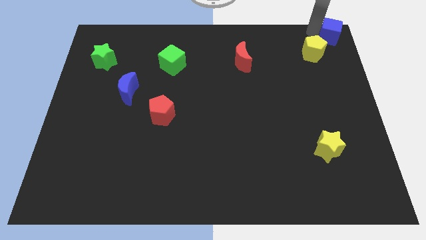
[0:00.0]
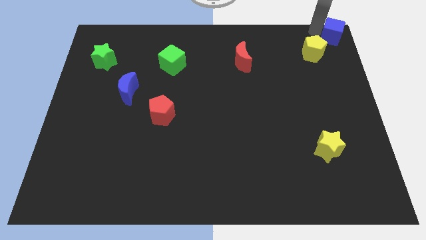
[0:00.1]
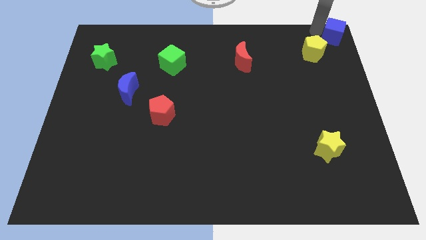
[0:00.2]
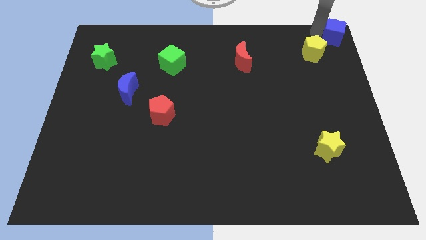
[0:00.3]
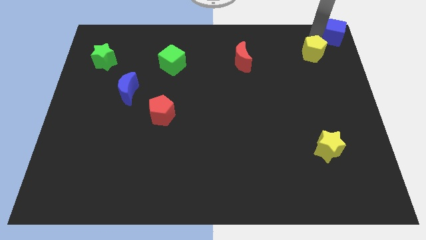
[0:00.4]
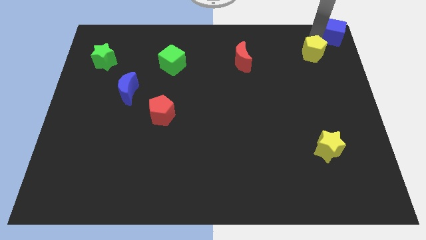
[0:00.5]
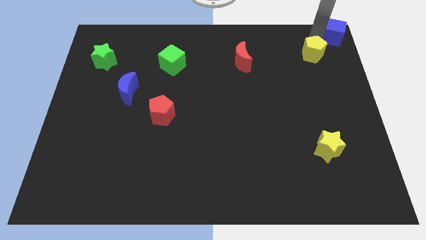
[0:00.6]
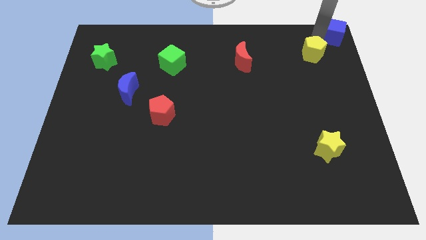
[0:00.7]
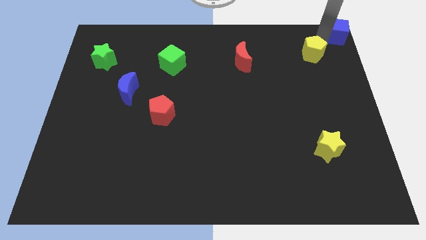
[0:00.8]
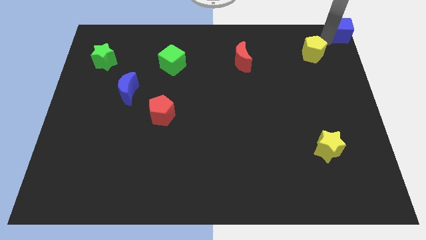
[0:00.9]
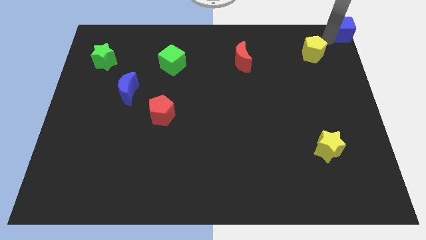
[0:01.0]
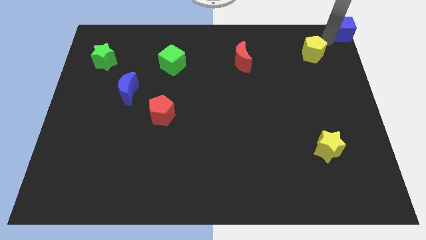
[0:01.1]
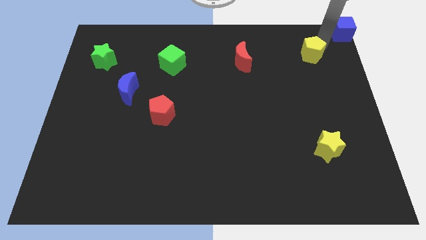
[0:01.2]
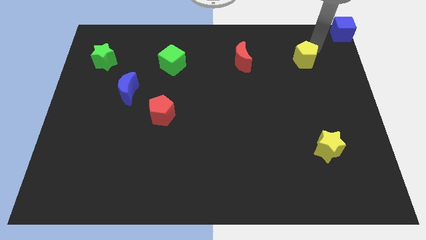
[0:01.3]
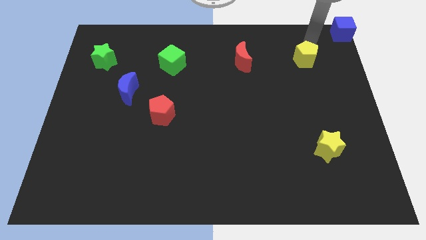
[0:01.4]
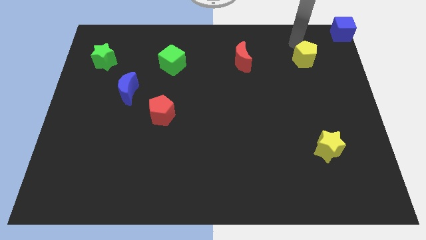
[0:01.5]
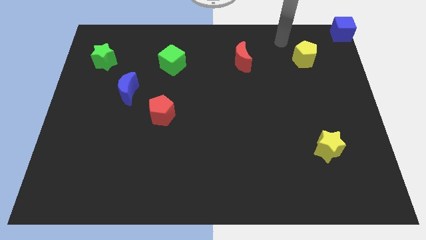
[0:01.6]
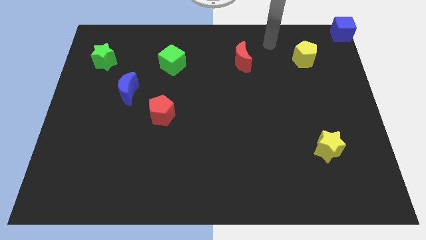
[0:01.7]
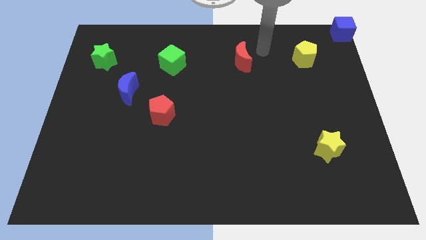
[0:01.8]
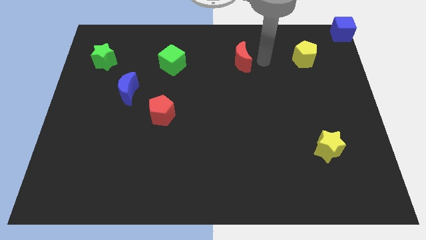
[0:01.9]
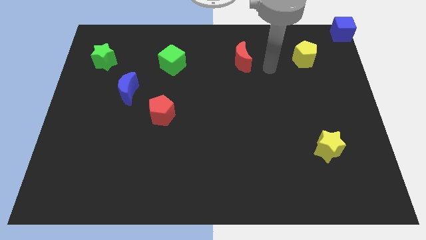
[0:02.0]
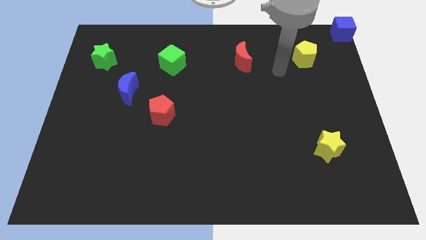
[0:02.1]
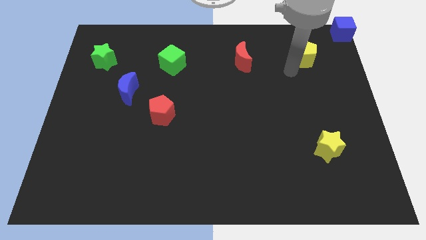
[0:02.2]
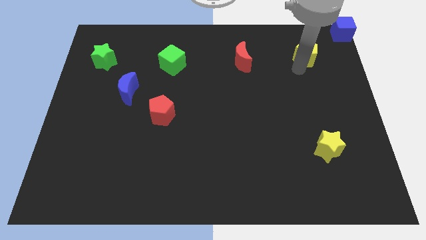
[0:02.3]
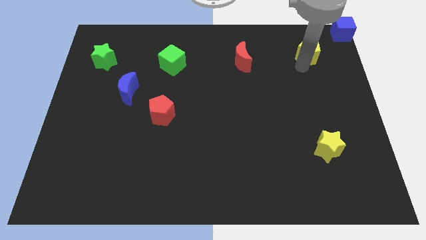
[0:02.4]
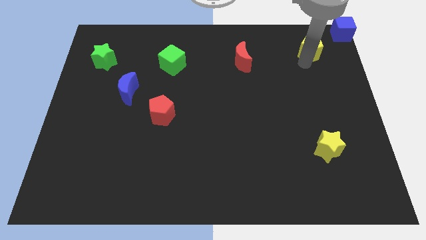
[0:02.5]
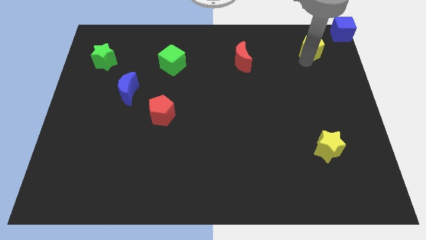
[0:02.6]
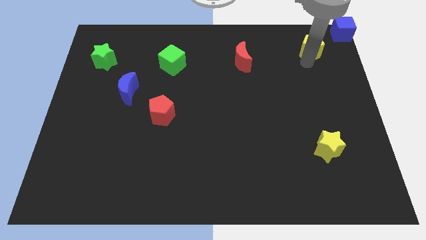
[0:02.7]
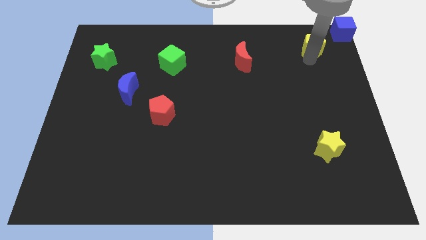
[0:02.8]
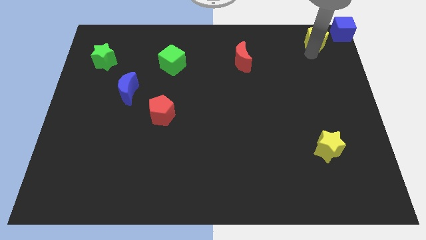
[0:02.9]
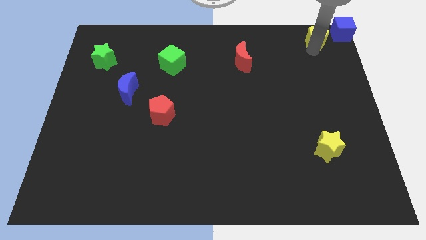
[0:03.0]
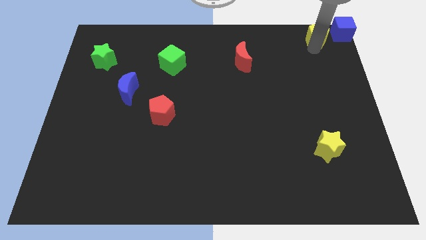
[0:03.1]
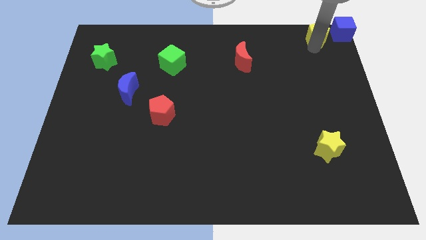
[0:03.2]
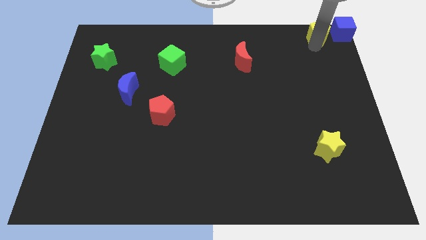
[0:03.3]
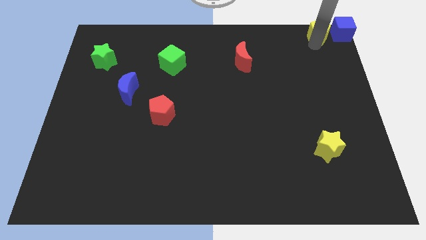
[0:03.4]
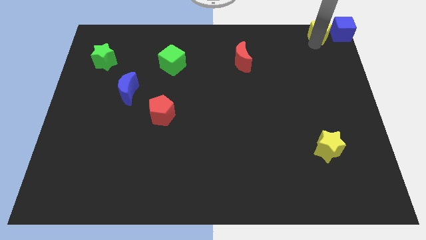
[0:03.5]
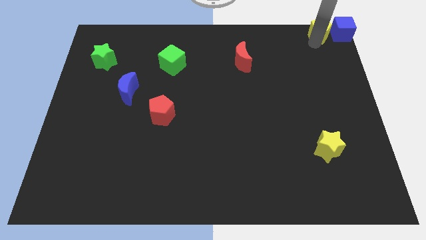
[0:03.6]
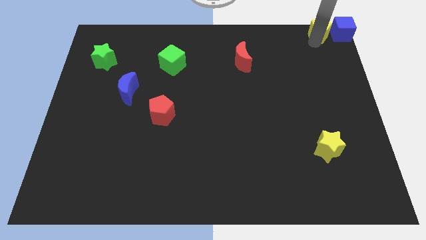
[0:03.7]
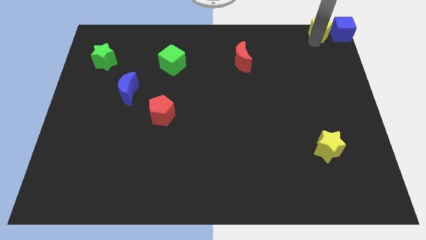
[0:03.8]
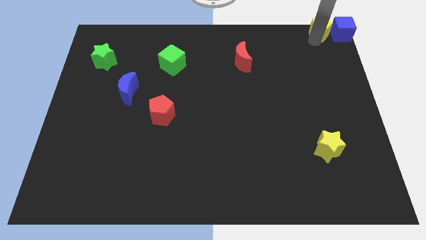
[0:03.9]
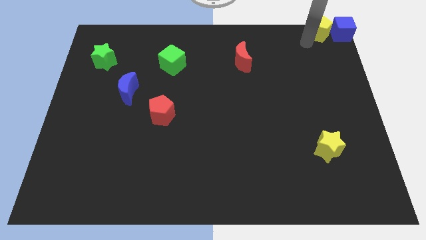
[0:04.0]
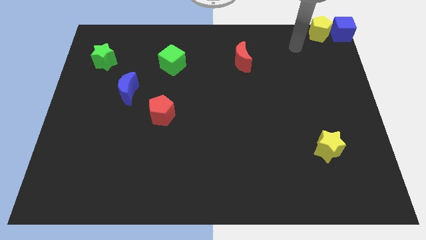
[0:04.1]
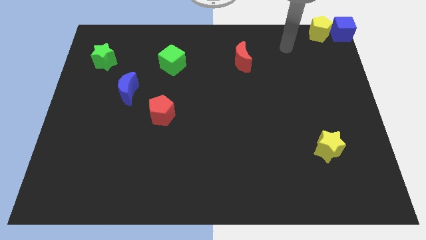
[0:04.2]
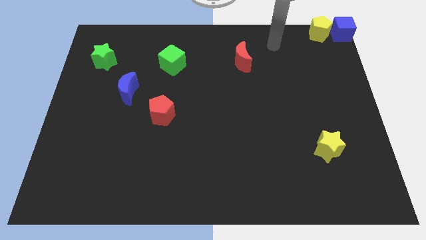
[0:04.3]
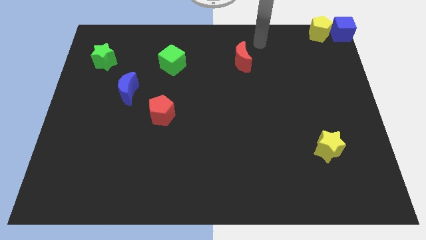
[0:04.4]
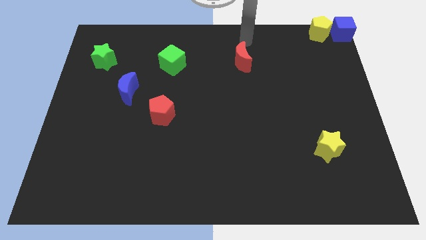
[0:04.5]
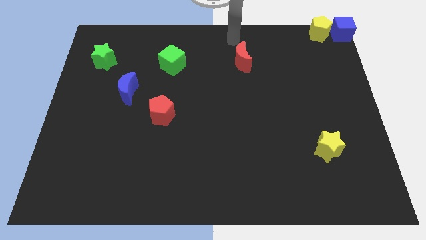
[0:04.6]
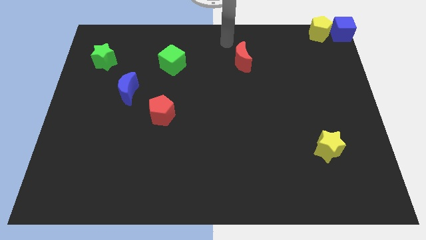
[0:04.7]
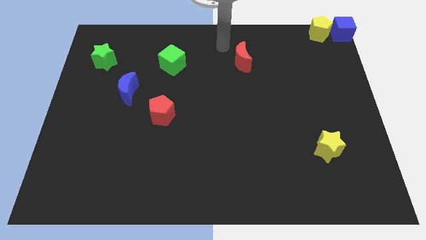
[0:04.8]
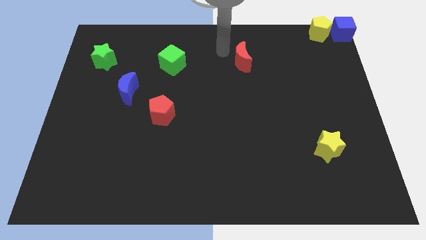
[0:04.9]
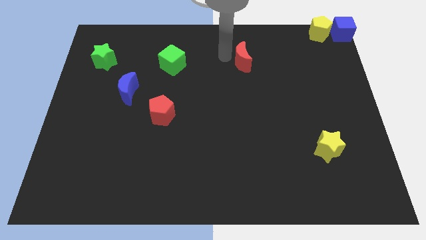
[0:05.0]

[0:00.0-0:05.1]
move the yellow pentagon to the left side of the blue cube

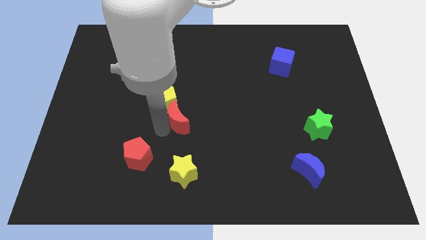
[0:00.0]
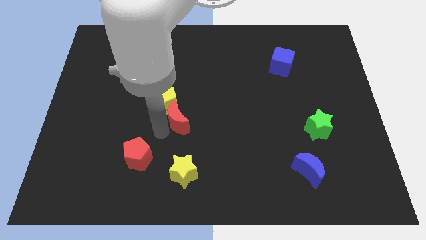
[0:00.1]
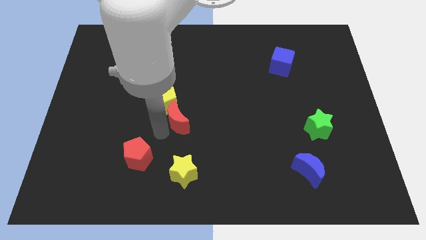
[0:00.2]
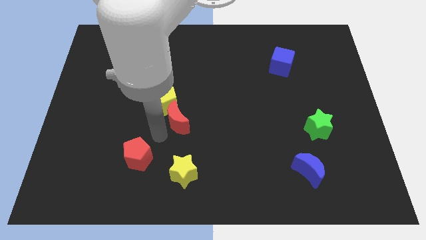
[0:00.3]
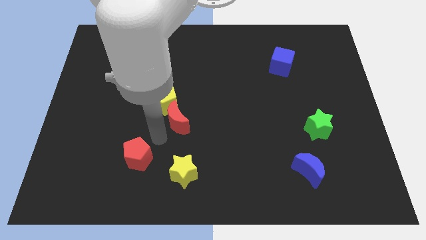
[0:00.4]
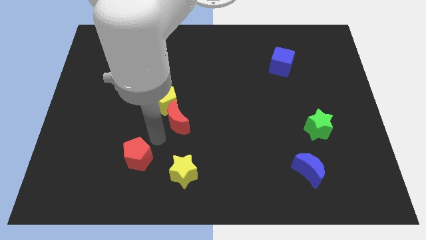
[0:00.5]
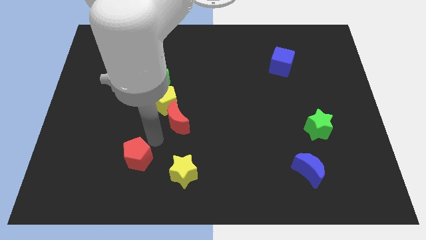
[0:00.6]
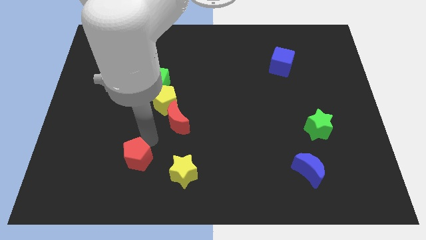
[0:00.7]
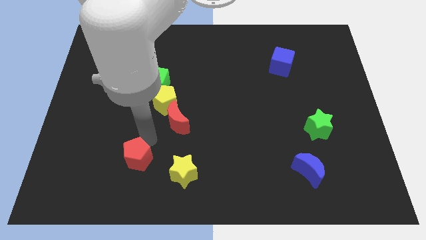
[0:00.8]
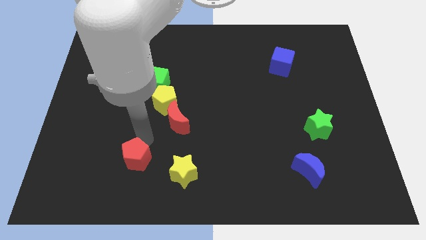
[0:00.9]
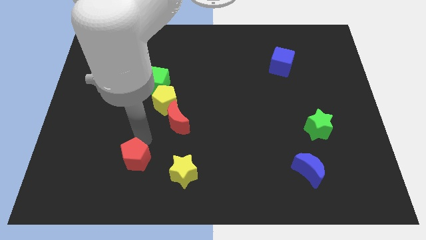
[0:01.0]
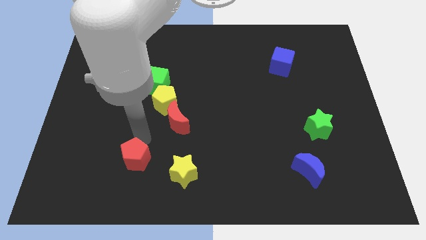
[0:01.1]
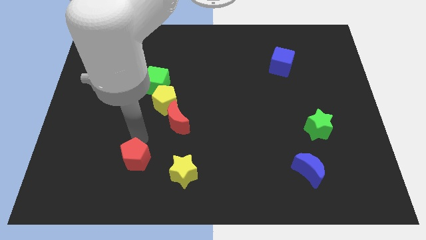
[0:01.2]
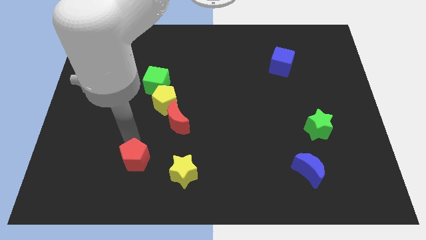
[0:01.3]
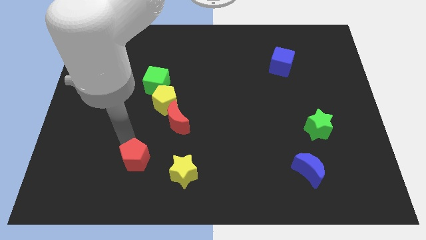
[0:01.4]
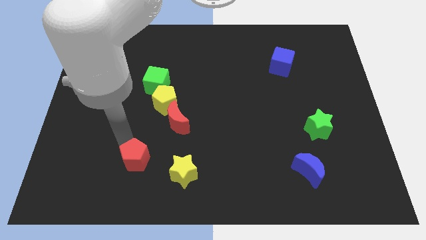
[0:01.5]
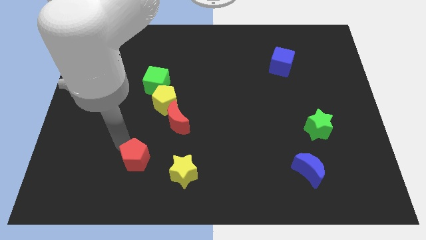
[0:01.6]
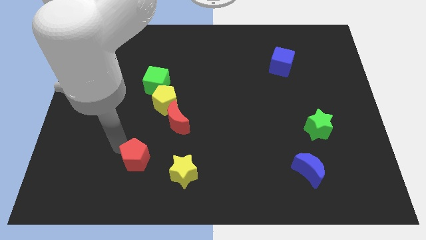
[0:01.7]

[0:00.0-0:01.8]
move your arm towards the red pentagon

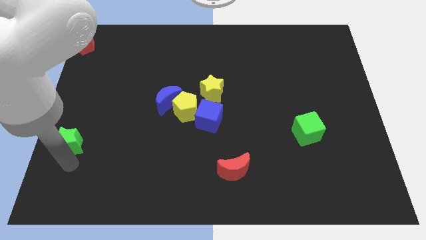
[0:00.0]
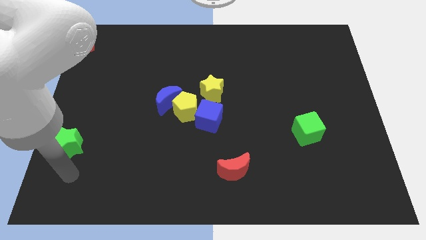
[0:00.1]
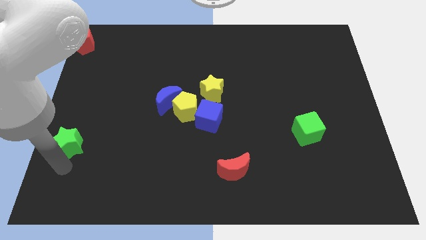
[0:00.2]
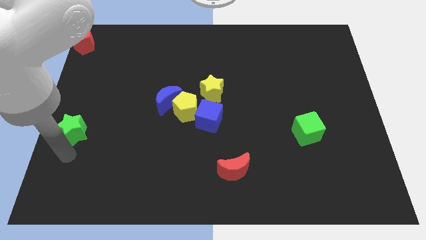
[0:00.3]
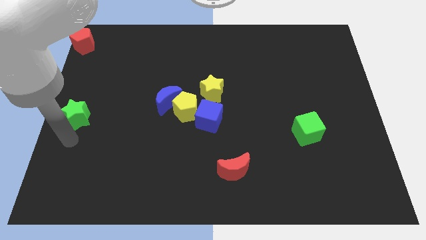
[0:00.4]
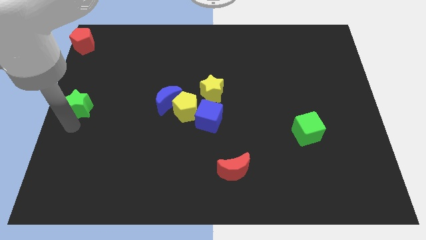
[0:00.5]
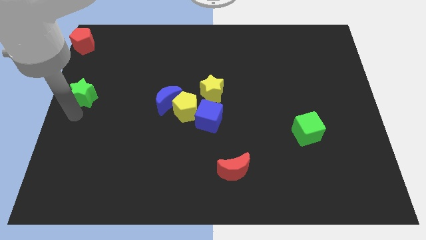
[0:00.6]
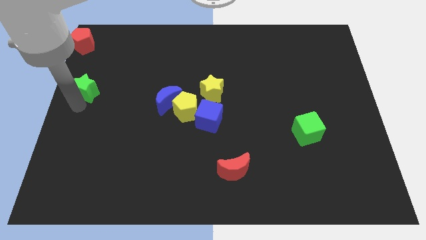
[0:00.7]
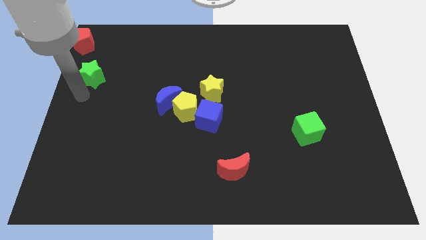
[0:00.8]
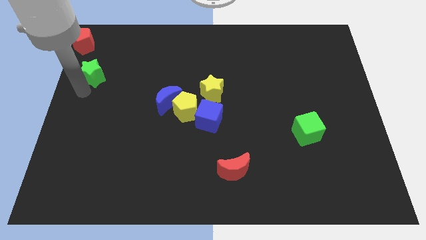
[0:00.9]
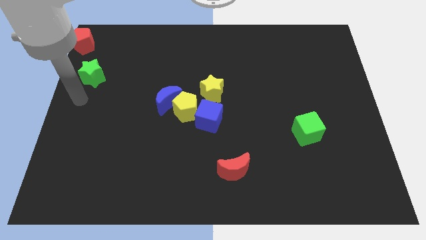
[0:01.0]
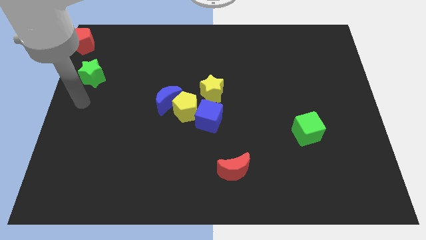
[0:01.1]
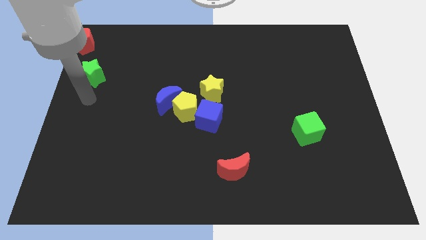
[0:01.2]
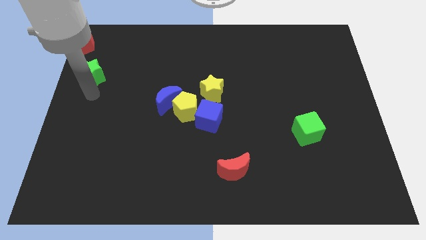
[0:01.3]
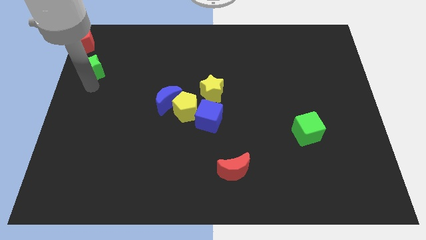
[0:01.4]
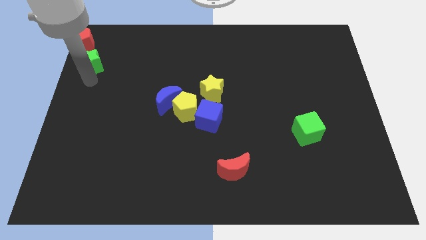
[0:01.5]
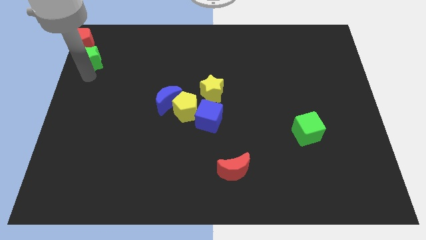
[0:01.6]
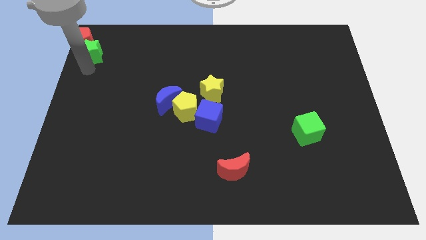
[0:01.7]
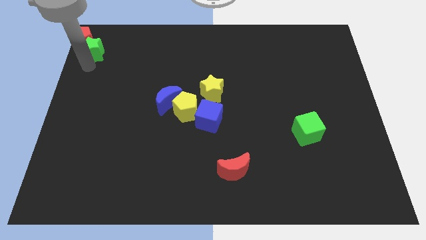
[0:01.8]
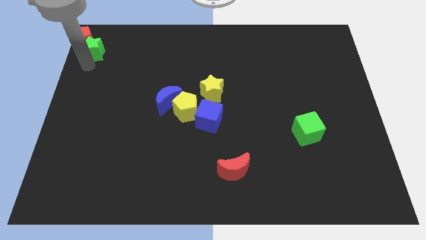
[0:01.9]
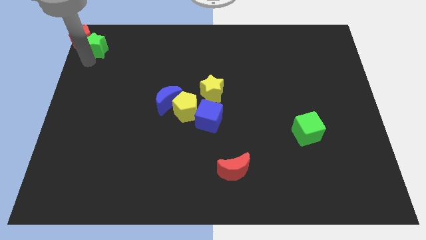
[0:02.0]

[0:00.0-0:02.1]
add green star to red pentagon
